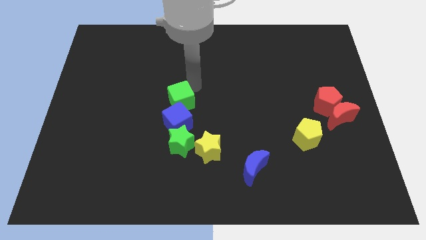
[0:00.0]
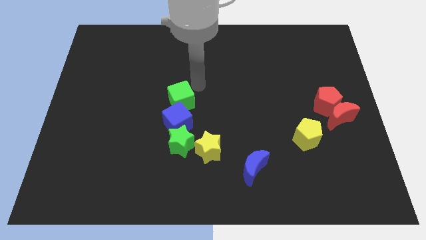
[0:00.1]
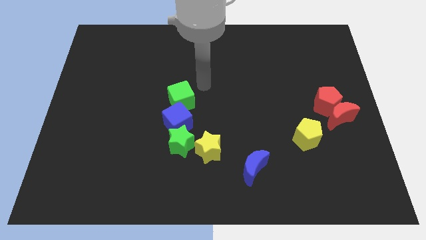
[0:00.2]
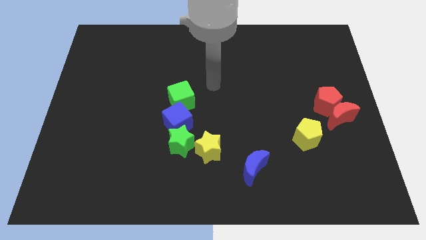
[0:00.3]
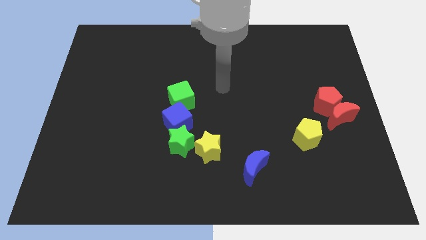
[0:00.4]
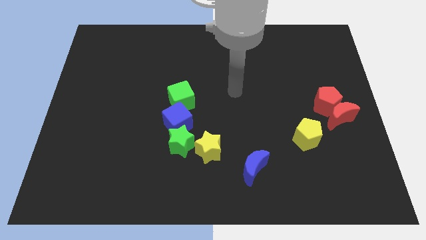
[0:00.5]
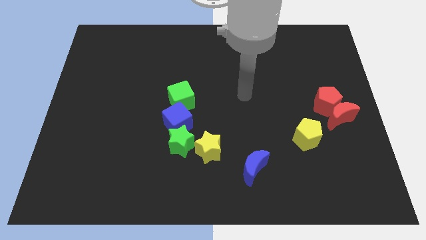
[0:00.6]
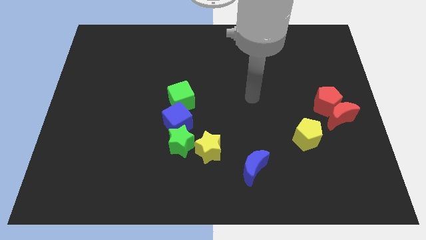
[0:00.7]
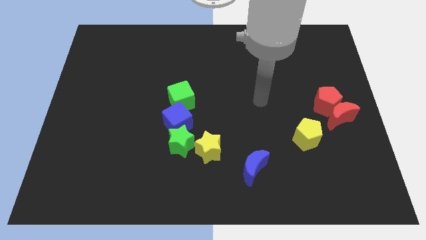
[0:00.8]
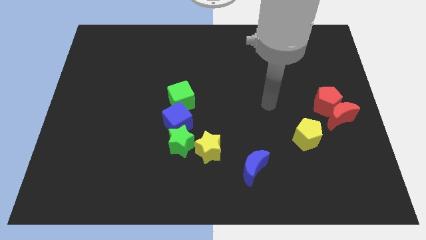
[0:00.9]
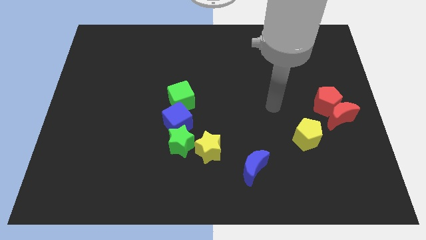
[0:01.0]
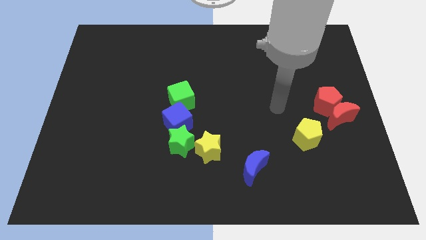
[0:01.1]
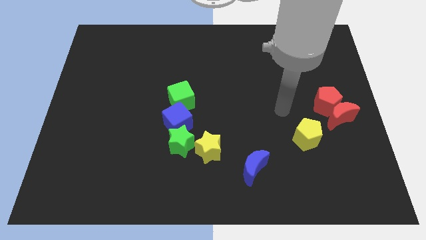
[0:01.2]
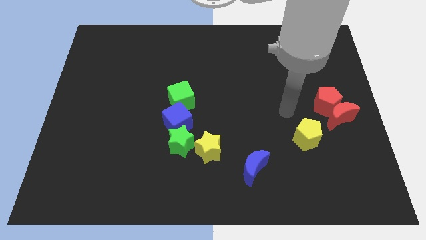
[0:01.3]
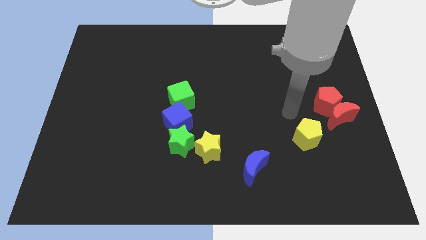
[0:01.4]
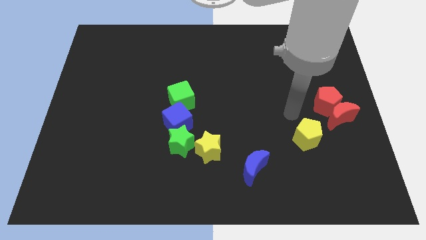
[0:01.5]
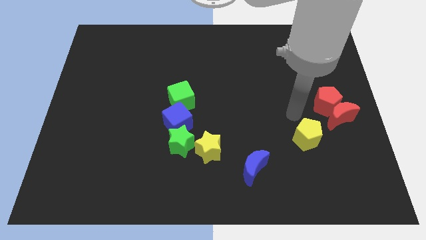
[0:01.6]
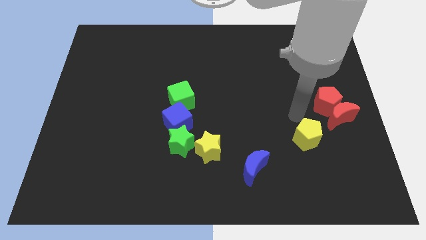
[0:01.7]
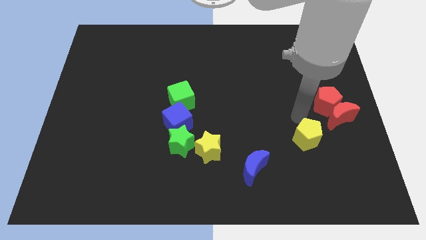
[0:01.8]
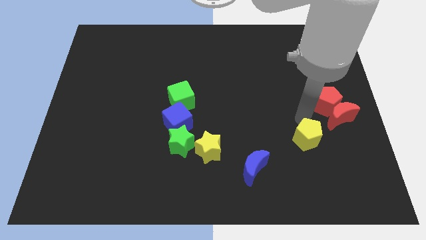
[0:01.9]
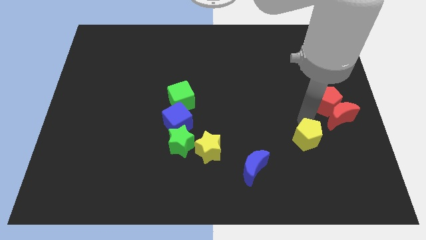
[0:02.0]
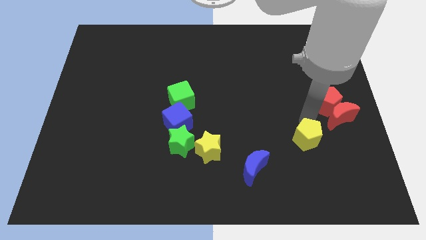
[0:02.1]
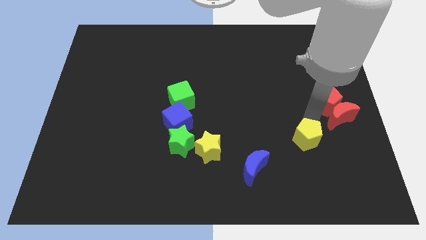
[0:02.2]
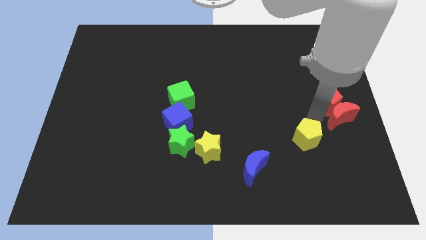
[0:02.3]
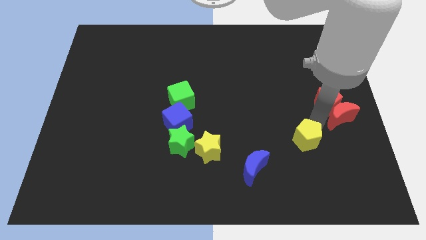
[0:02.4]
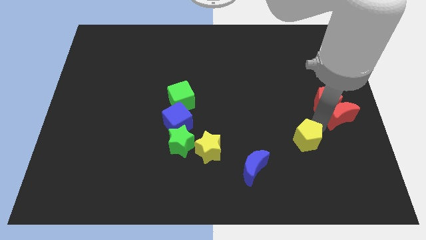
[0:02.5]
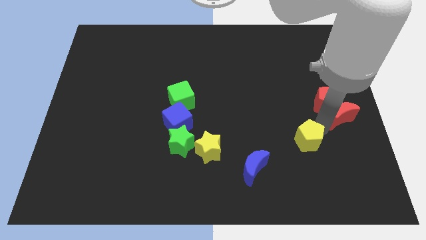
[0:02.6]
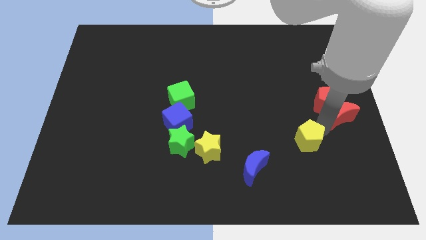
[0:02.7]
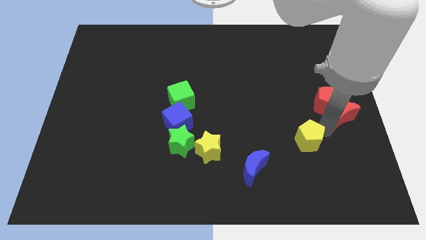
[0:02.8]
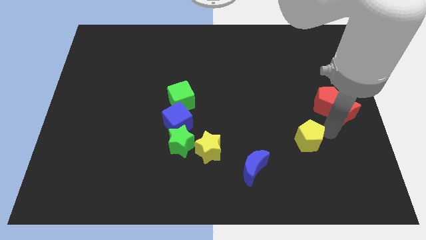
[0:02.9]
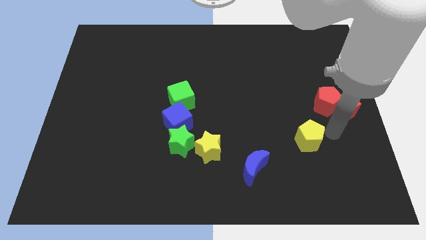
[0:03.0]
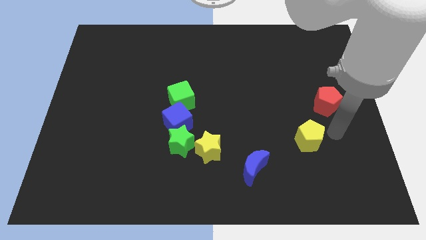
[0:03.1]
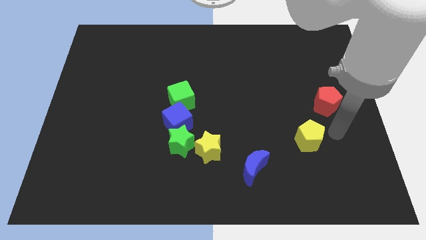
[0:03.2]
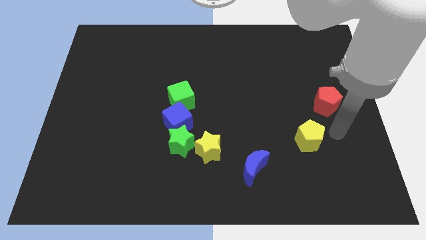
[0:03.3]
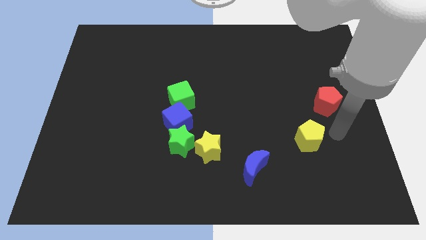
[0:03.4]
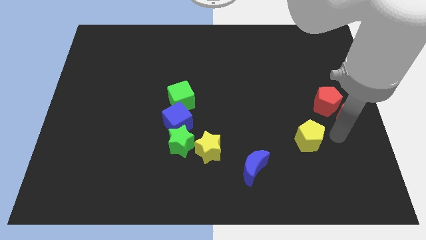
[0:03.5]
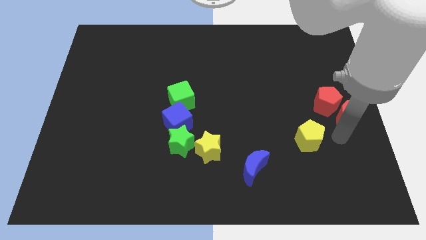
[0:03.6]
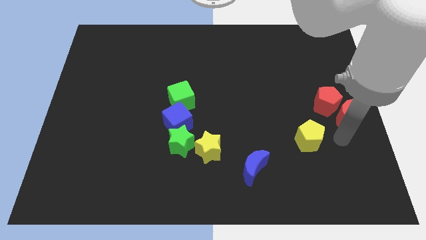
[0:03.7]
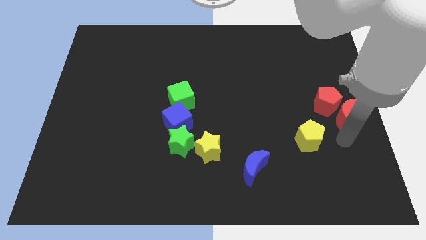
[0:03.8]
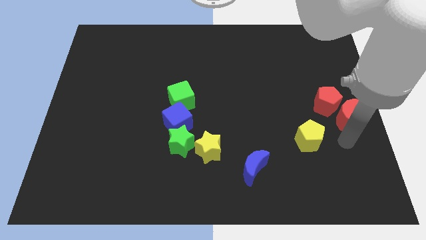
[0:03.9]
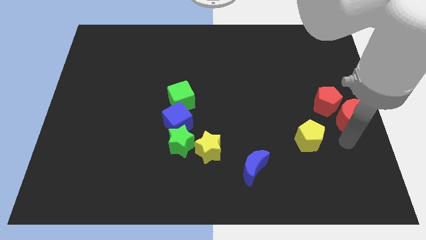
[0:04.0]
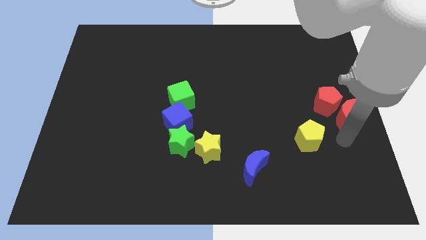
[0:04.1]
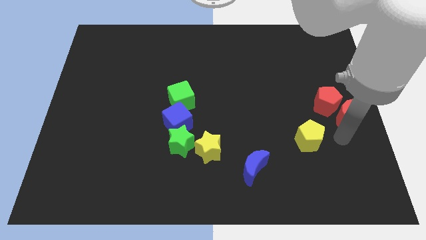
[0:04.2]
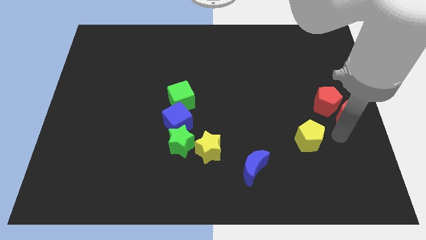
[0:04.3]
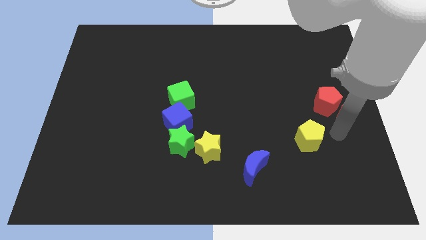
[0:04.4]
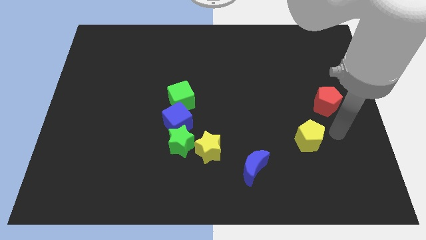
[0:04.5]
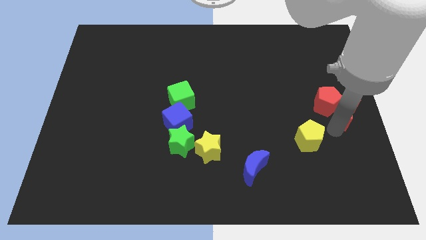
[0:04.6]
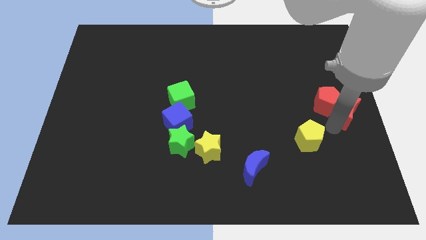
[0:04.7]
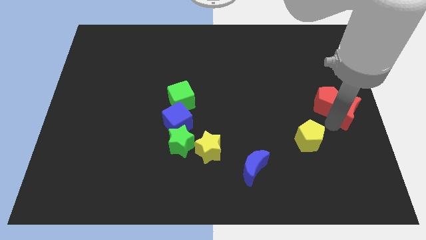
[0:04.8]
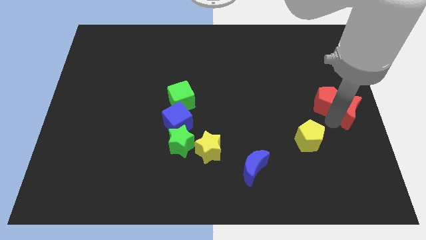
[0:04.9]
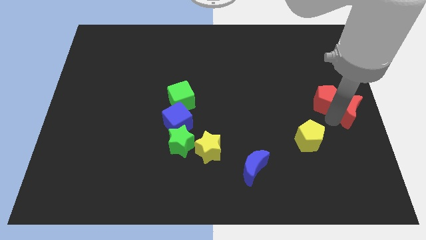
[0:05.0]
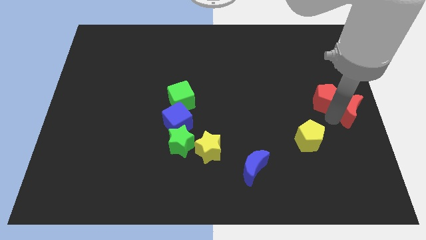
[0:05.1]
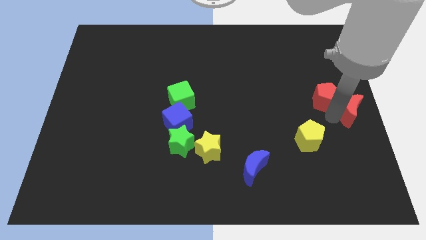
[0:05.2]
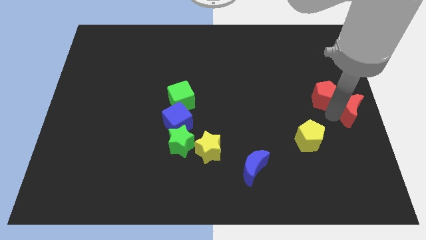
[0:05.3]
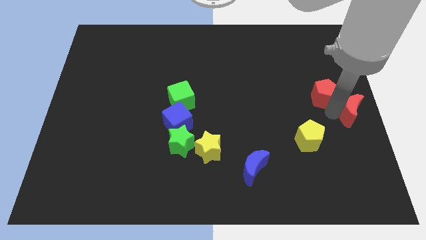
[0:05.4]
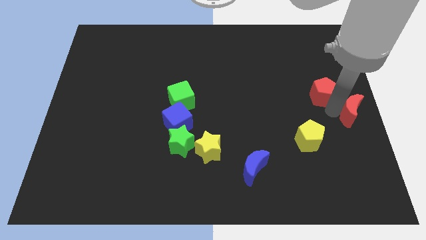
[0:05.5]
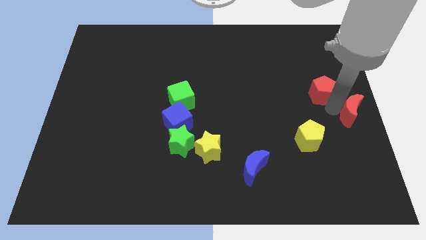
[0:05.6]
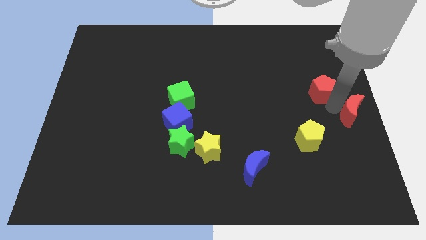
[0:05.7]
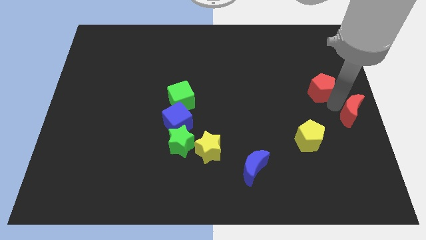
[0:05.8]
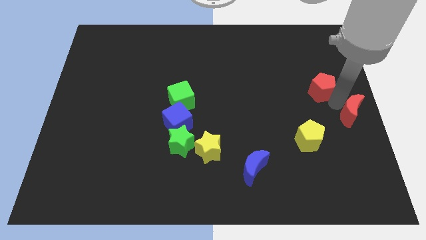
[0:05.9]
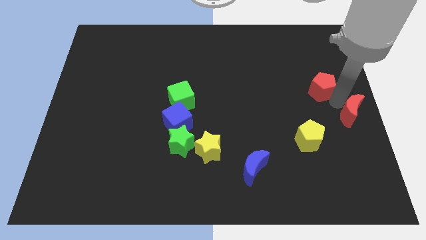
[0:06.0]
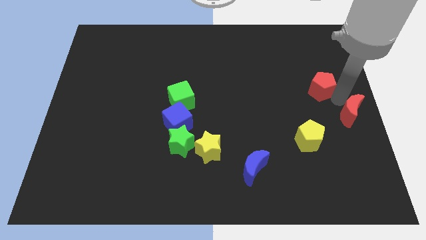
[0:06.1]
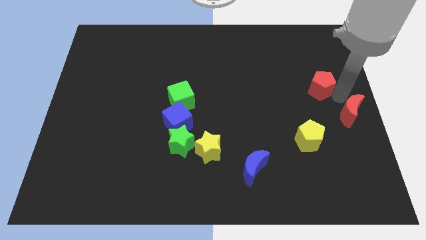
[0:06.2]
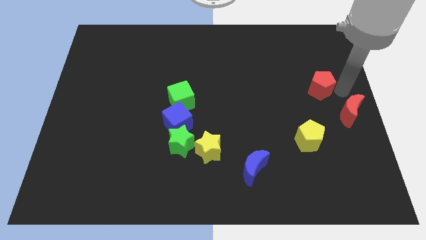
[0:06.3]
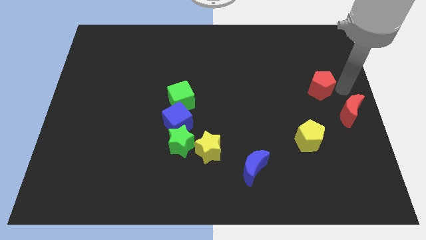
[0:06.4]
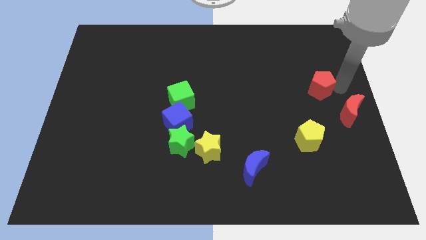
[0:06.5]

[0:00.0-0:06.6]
separate the red pentagon and red crescent

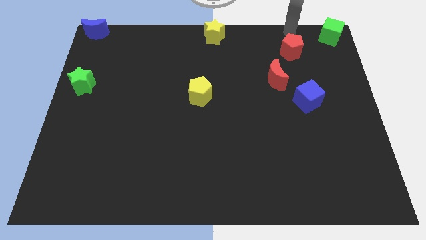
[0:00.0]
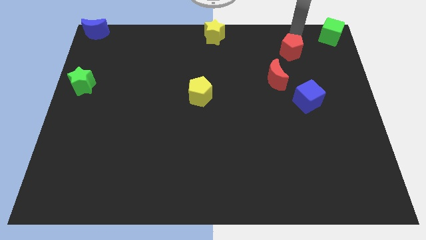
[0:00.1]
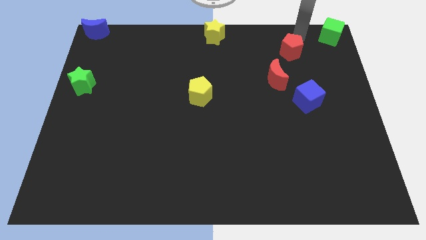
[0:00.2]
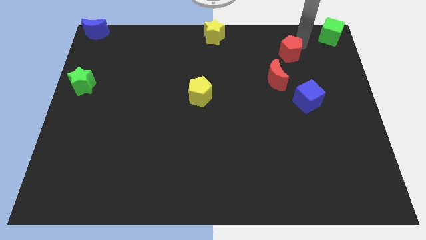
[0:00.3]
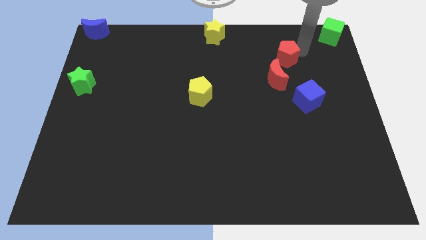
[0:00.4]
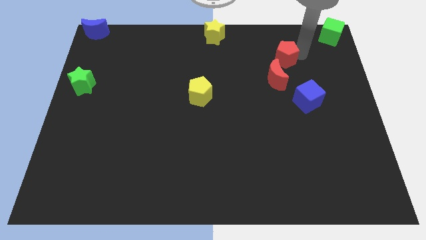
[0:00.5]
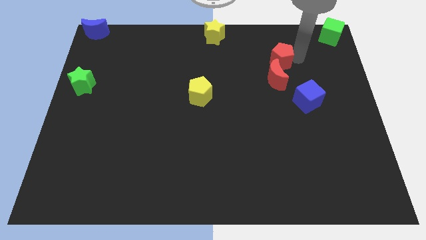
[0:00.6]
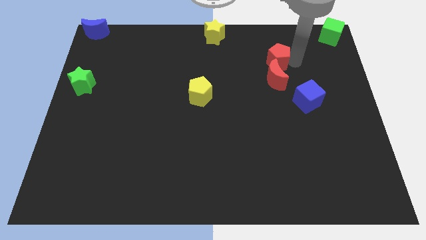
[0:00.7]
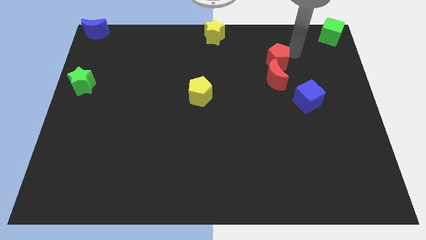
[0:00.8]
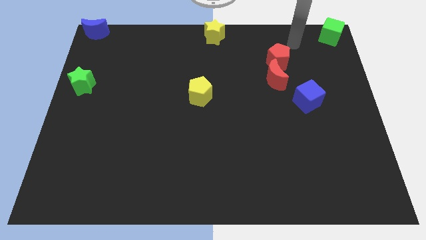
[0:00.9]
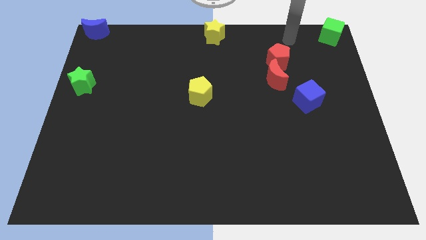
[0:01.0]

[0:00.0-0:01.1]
place the red pentagon above the red crescent

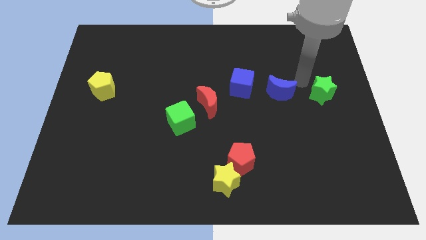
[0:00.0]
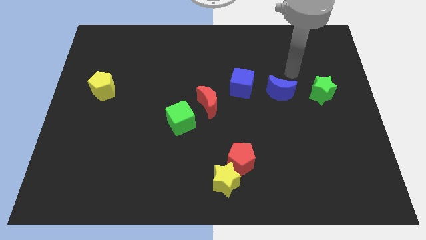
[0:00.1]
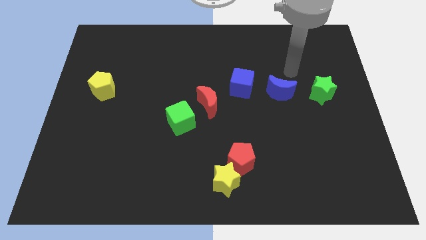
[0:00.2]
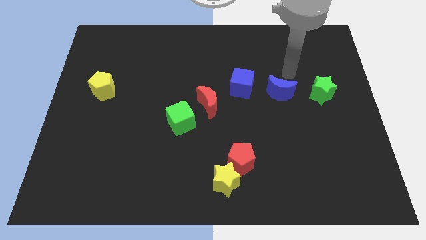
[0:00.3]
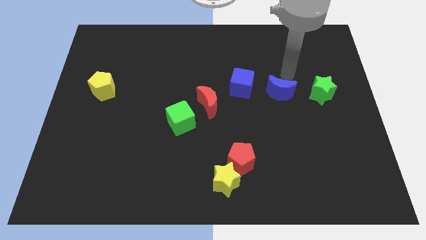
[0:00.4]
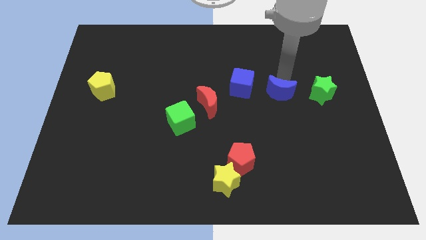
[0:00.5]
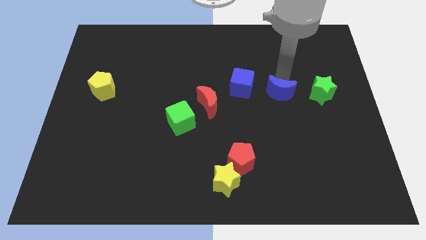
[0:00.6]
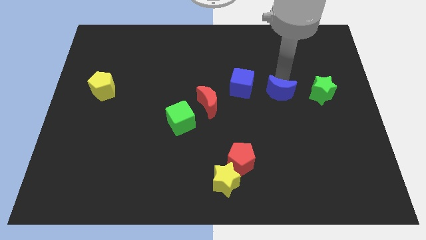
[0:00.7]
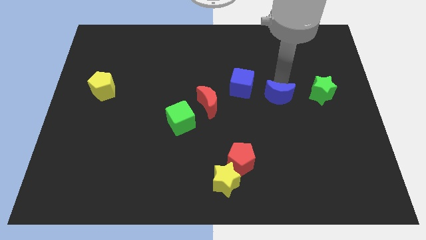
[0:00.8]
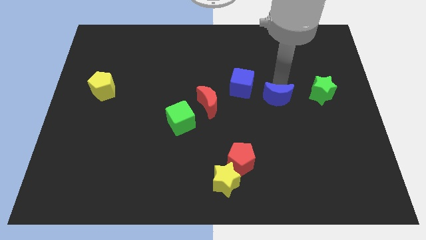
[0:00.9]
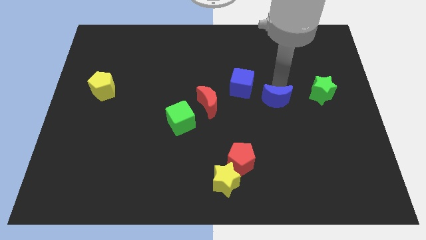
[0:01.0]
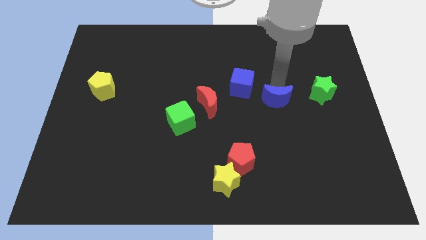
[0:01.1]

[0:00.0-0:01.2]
slide the blue moon slightly to the bottom side of the board
